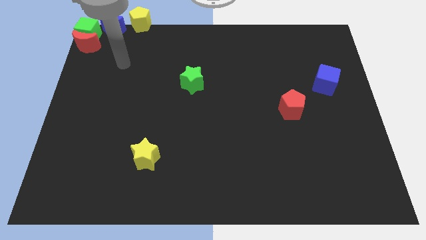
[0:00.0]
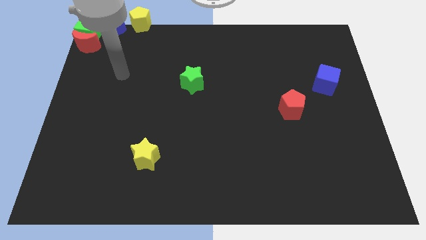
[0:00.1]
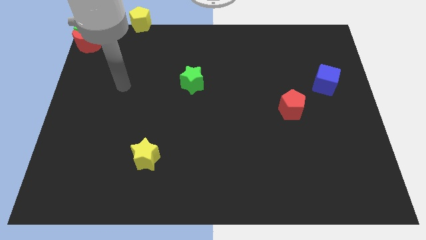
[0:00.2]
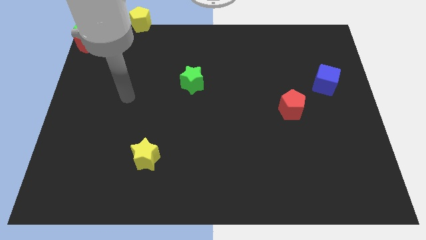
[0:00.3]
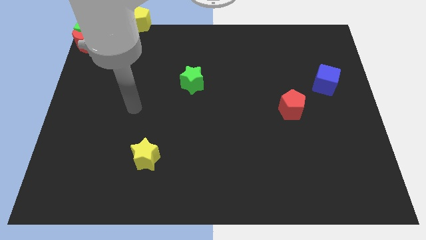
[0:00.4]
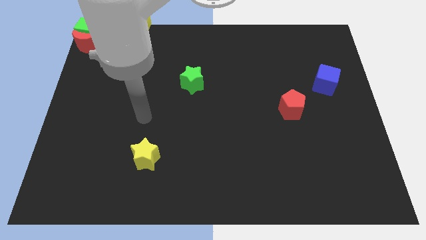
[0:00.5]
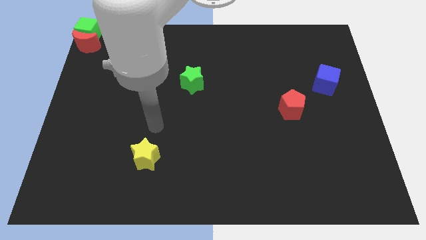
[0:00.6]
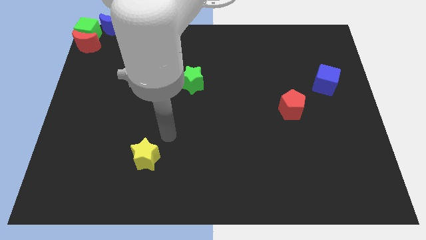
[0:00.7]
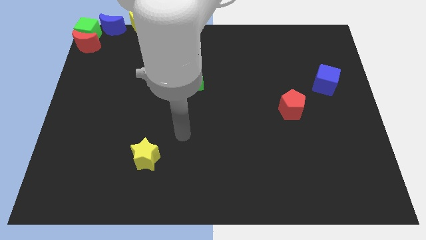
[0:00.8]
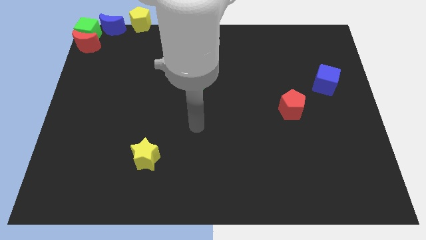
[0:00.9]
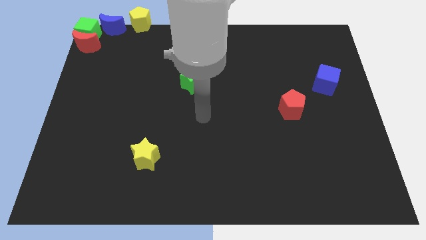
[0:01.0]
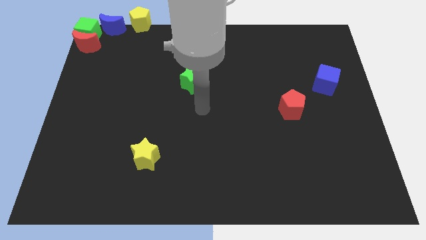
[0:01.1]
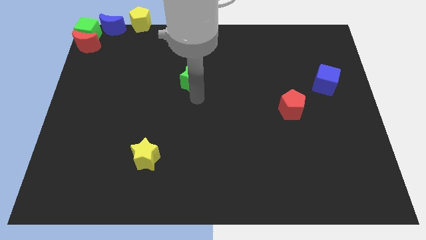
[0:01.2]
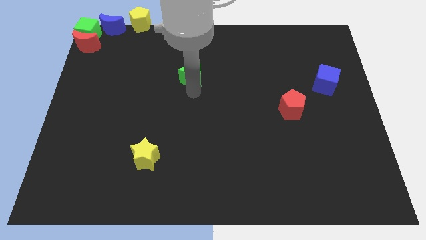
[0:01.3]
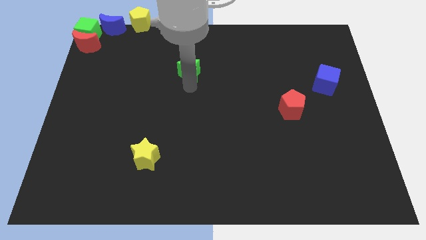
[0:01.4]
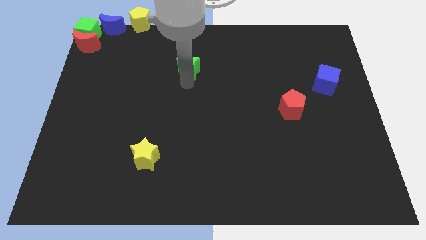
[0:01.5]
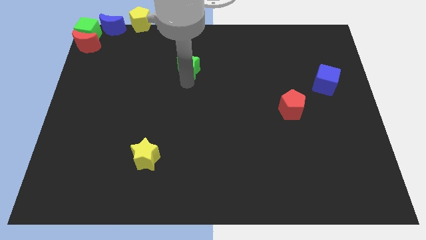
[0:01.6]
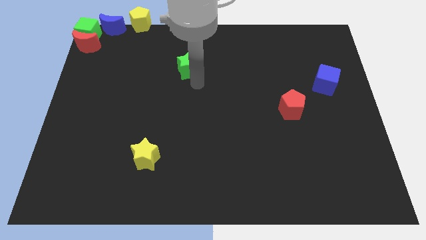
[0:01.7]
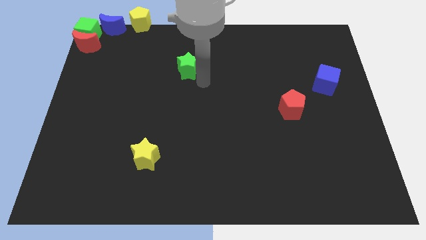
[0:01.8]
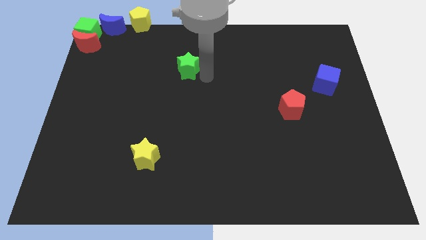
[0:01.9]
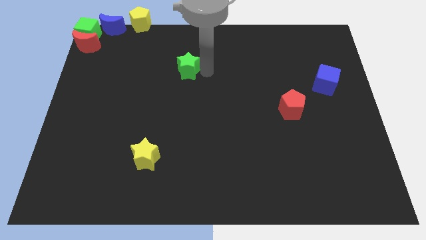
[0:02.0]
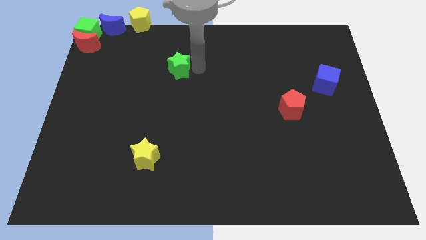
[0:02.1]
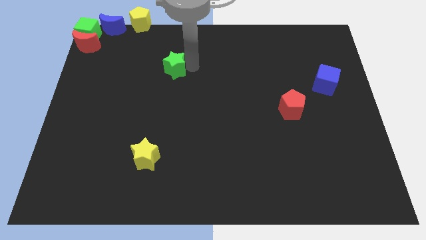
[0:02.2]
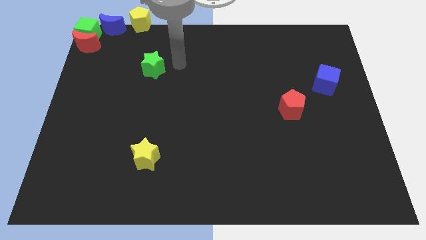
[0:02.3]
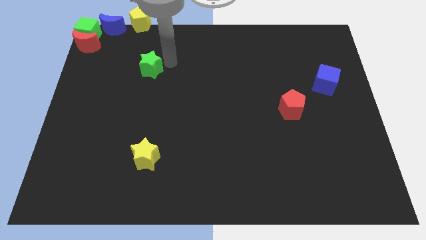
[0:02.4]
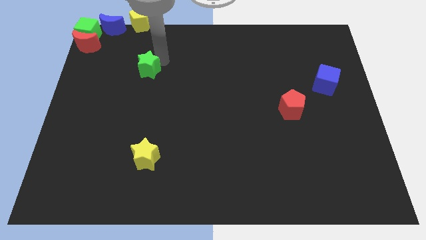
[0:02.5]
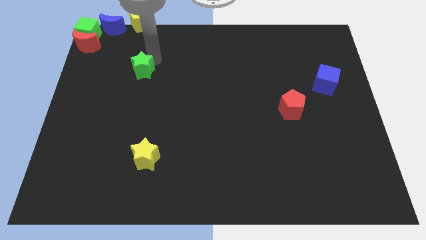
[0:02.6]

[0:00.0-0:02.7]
place green star below yellow pentagon

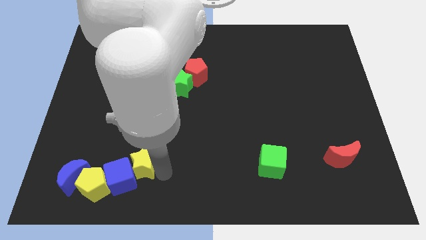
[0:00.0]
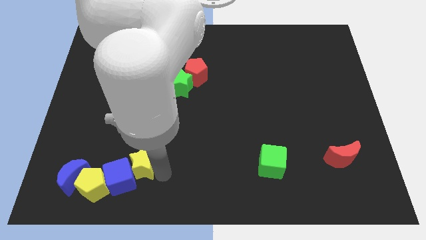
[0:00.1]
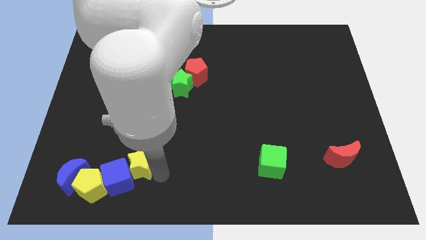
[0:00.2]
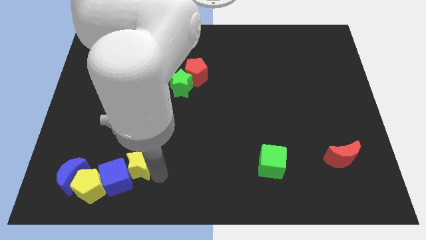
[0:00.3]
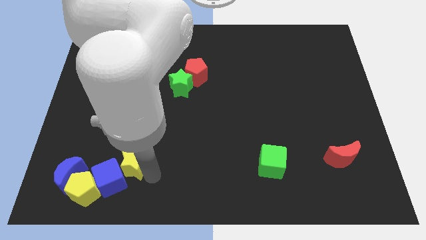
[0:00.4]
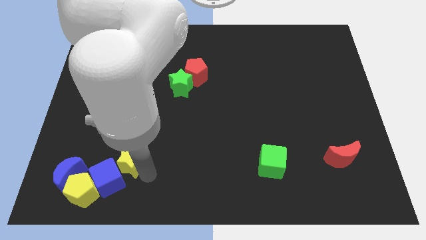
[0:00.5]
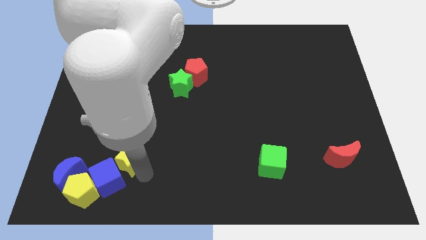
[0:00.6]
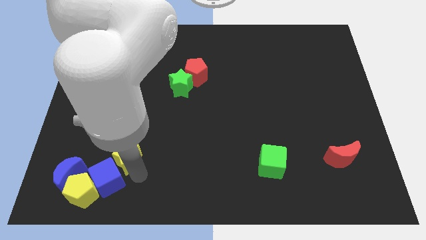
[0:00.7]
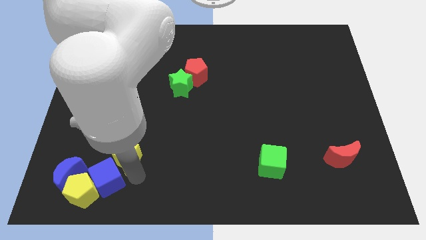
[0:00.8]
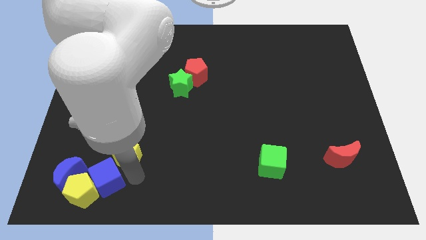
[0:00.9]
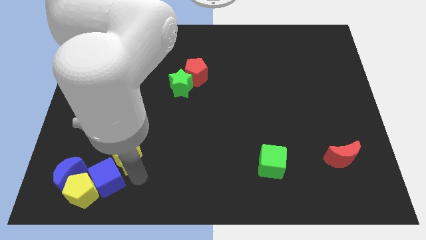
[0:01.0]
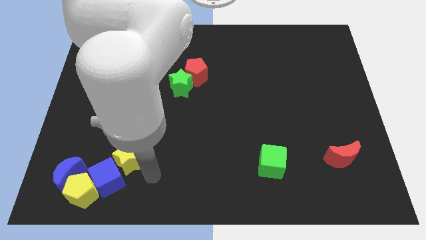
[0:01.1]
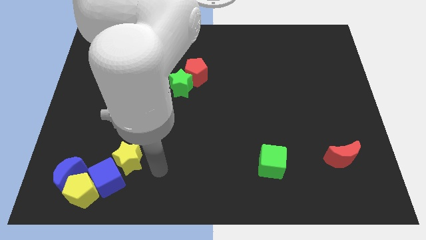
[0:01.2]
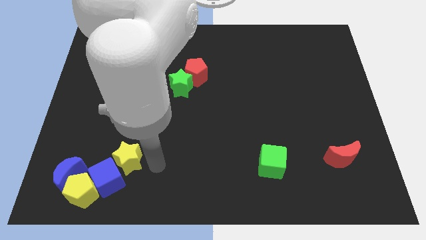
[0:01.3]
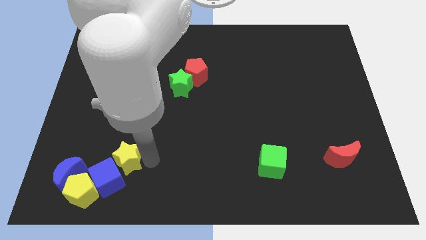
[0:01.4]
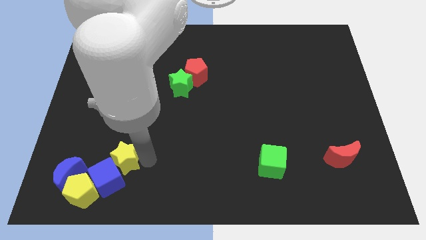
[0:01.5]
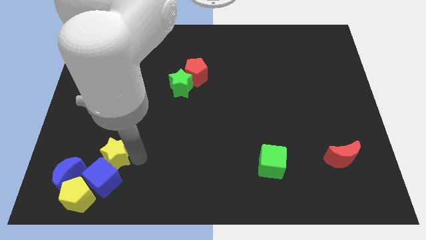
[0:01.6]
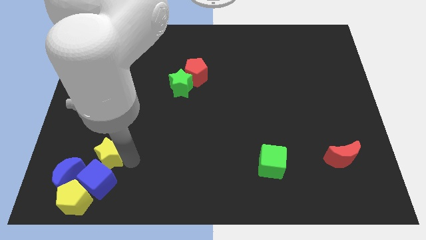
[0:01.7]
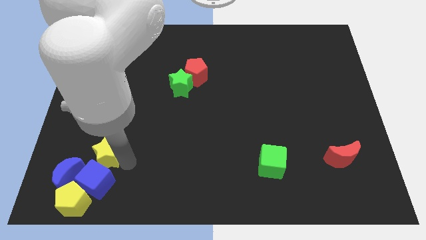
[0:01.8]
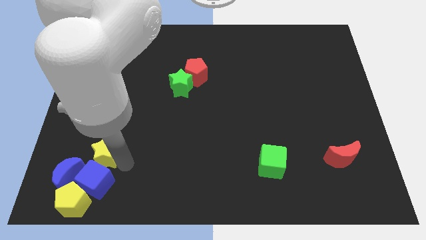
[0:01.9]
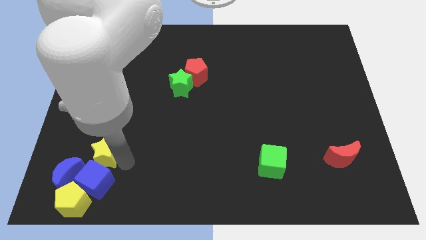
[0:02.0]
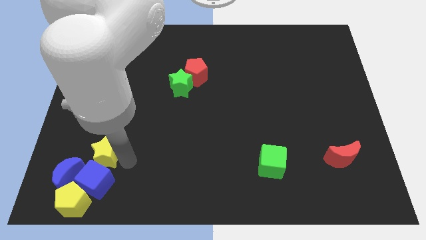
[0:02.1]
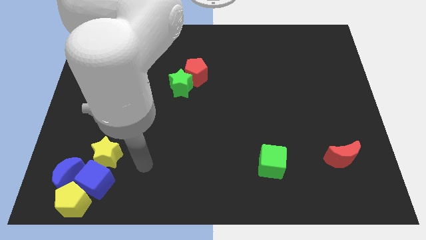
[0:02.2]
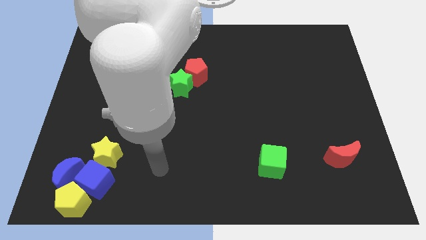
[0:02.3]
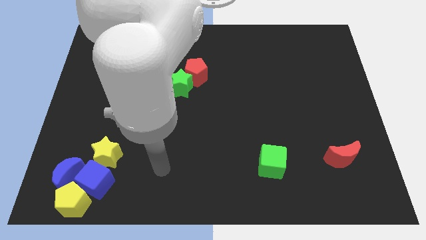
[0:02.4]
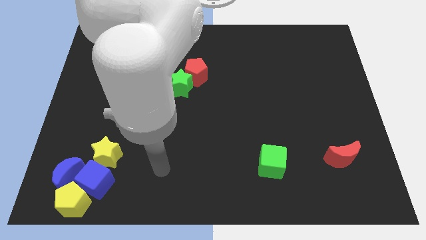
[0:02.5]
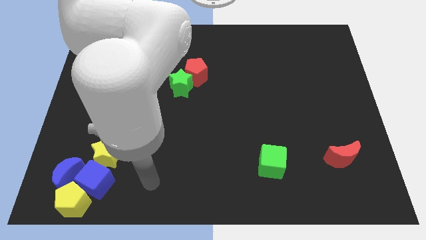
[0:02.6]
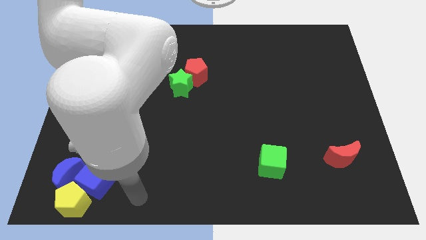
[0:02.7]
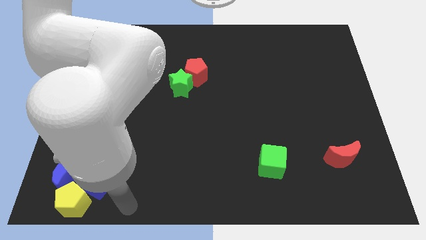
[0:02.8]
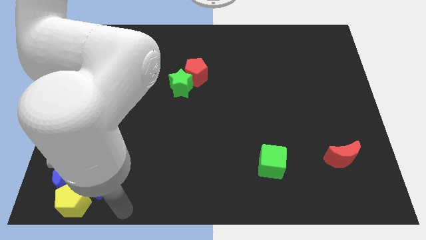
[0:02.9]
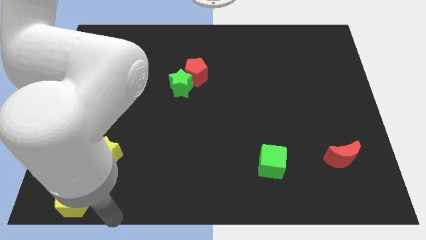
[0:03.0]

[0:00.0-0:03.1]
move the group of blocks to the bottom right of the board

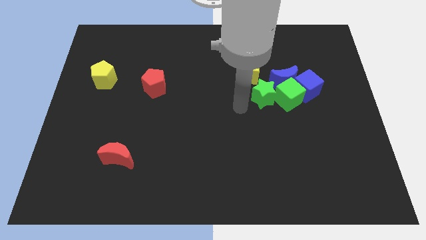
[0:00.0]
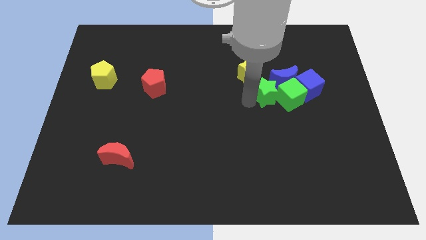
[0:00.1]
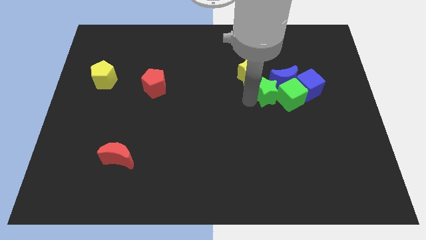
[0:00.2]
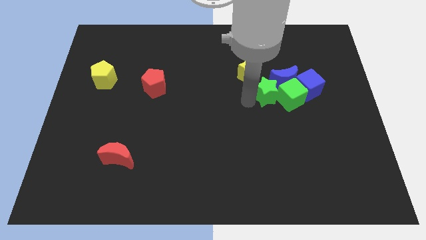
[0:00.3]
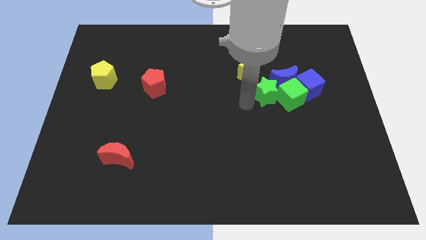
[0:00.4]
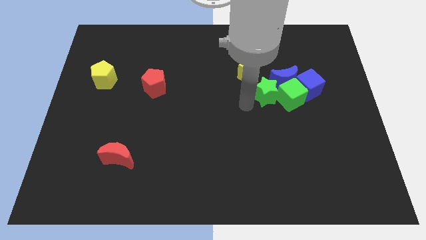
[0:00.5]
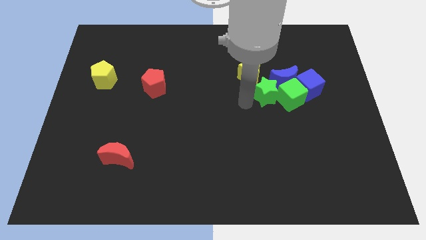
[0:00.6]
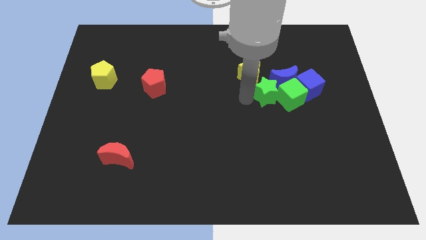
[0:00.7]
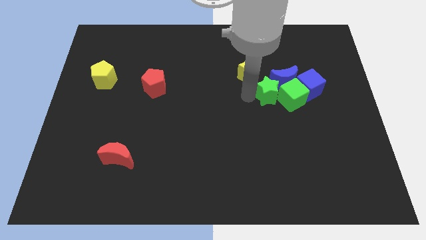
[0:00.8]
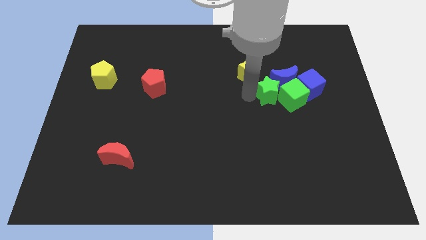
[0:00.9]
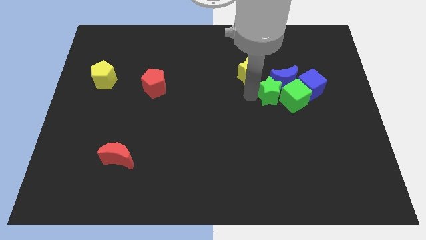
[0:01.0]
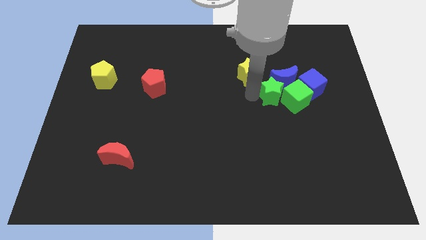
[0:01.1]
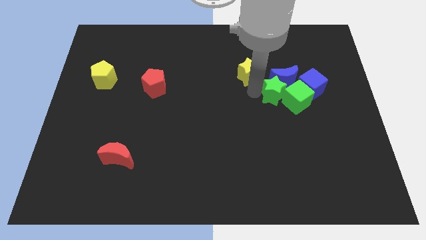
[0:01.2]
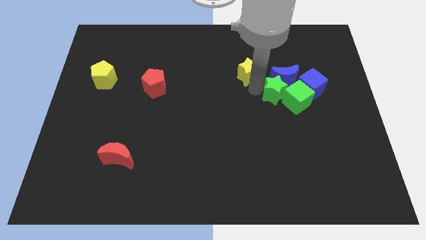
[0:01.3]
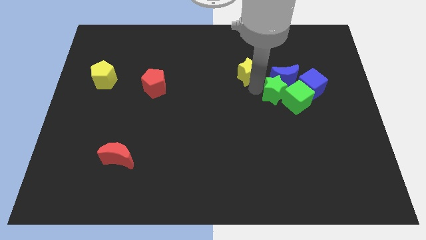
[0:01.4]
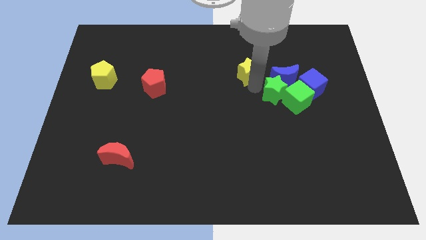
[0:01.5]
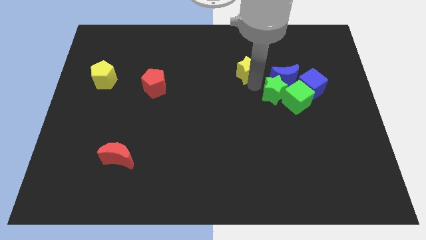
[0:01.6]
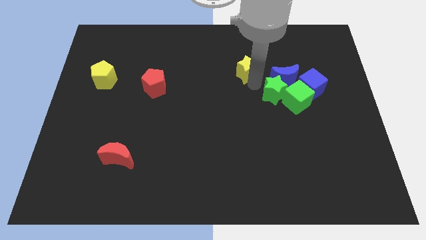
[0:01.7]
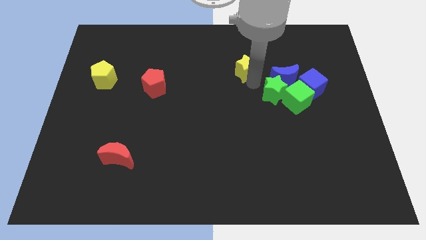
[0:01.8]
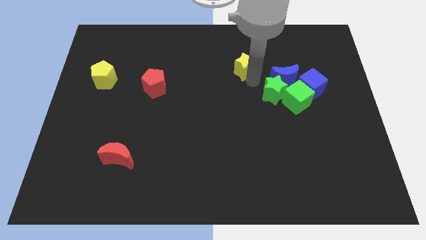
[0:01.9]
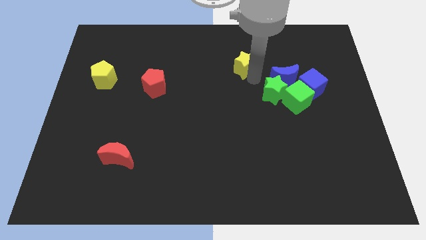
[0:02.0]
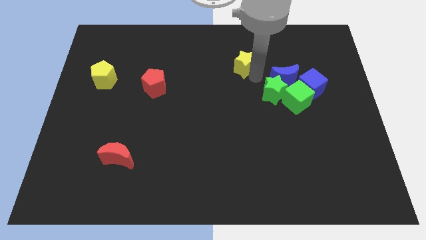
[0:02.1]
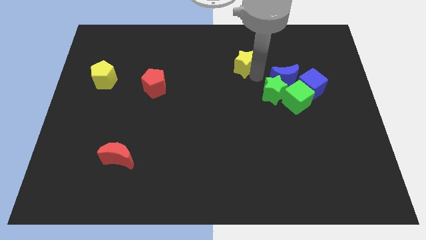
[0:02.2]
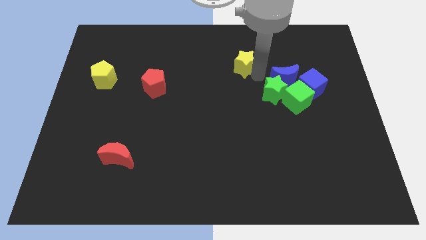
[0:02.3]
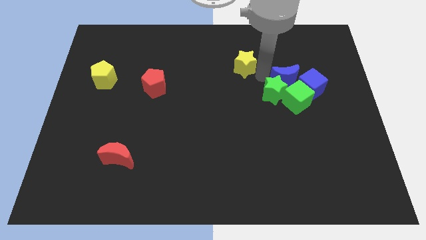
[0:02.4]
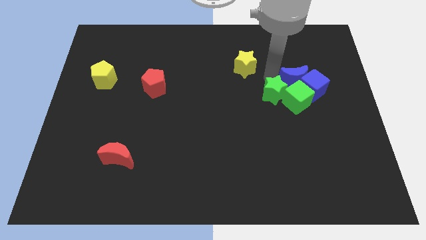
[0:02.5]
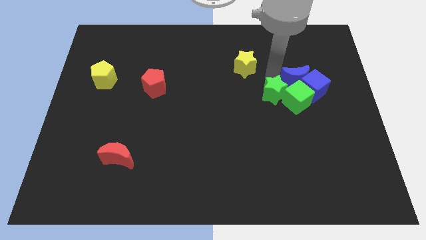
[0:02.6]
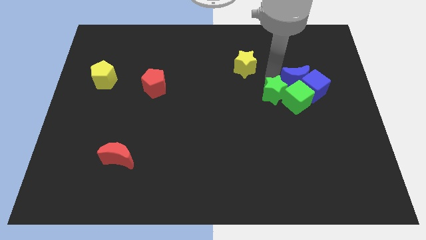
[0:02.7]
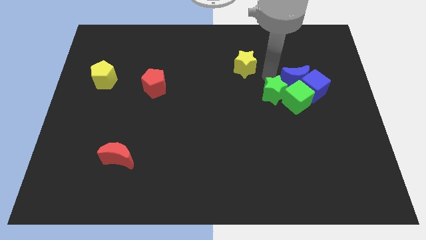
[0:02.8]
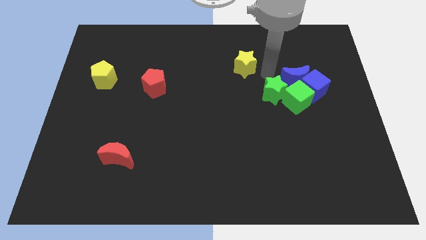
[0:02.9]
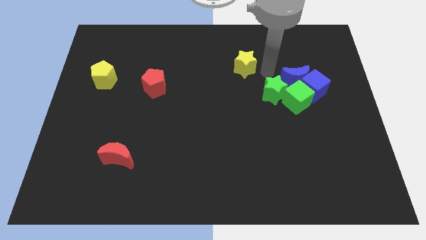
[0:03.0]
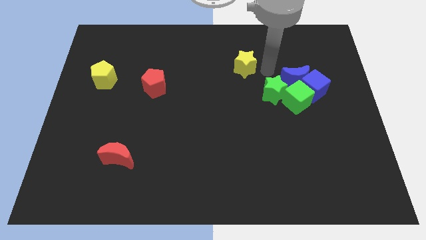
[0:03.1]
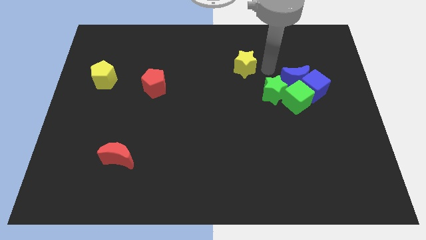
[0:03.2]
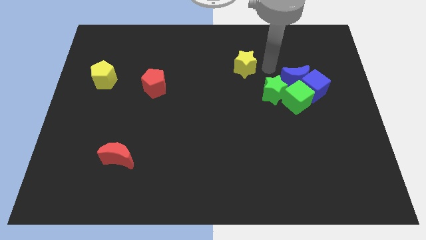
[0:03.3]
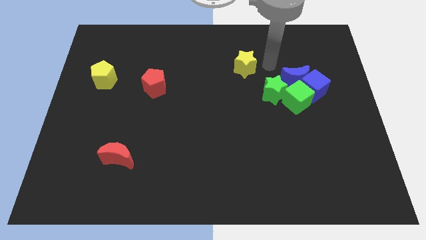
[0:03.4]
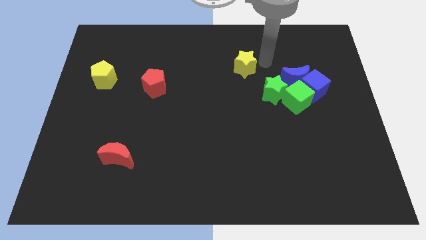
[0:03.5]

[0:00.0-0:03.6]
group up the green and blue blocks
